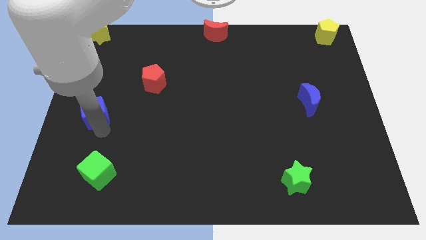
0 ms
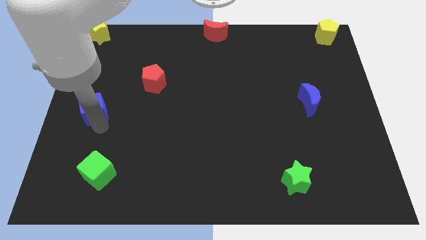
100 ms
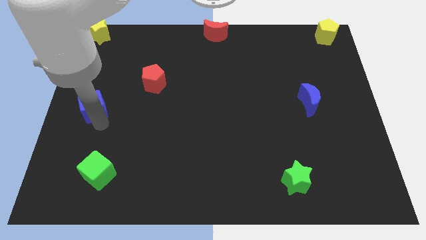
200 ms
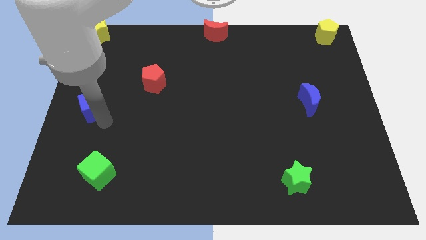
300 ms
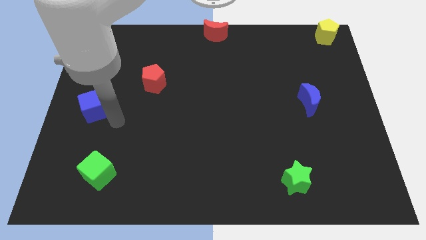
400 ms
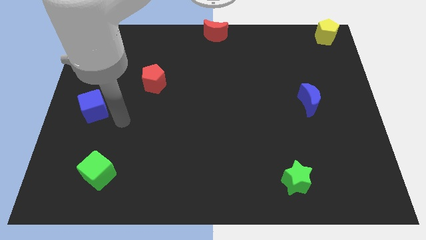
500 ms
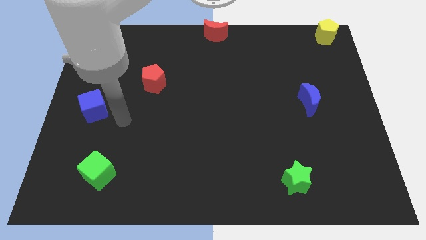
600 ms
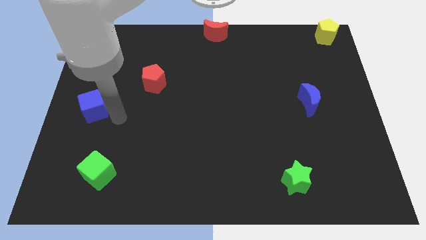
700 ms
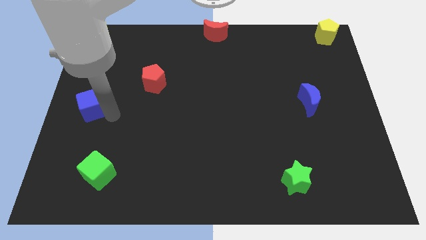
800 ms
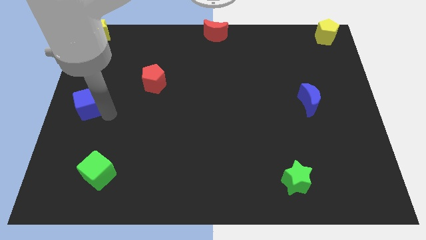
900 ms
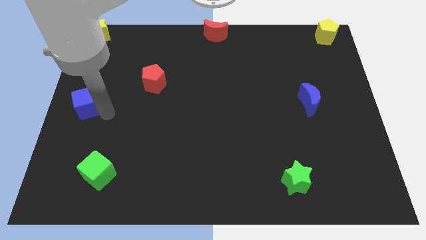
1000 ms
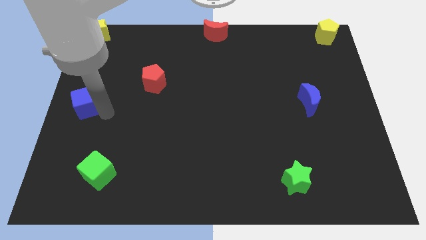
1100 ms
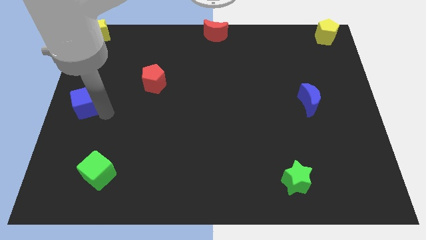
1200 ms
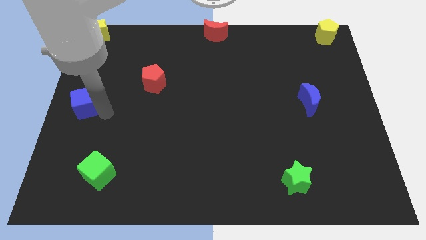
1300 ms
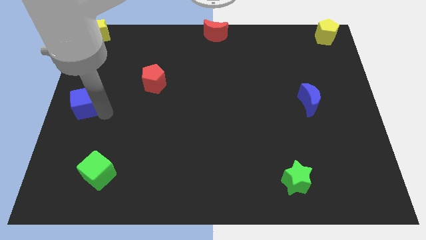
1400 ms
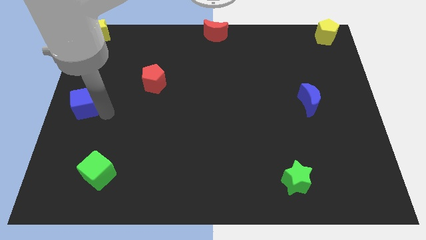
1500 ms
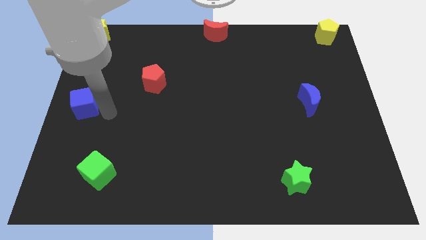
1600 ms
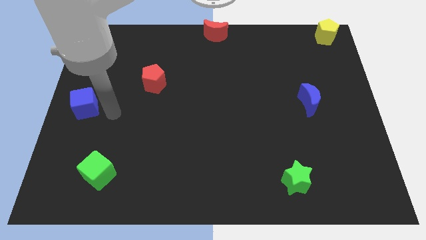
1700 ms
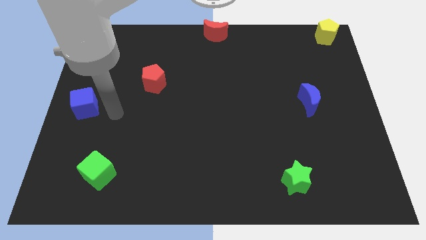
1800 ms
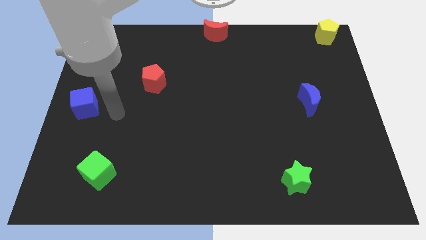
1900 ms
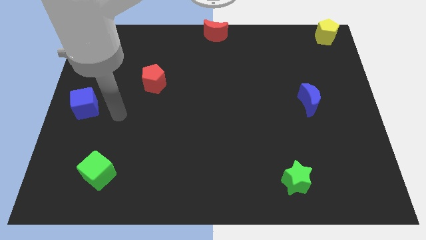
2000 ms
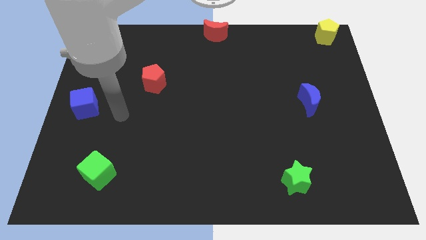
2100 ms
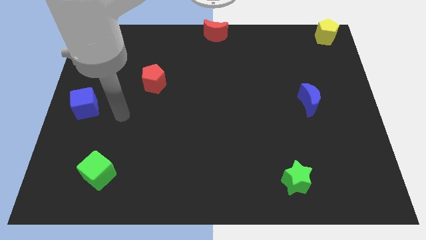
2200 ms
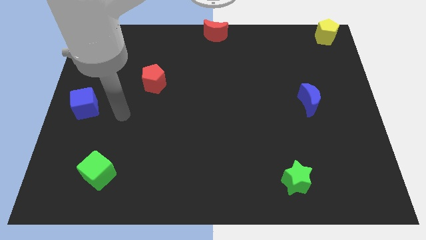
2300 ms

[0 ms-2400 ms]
move the blue cube to the left center of the board

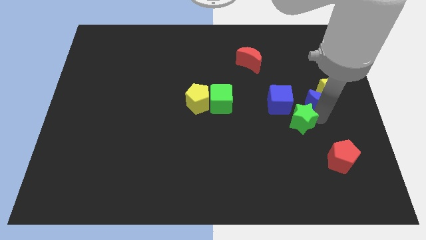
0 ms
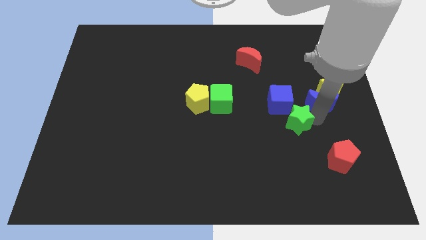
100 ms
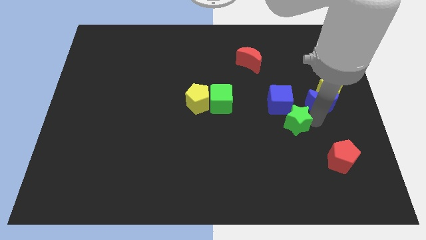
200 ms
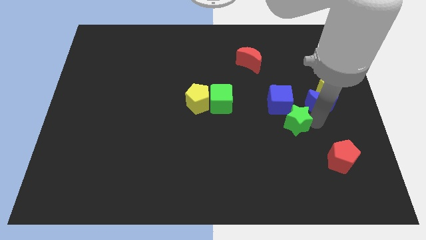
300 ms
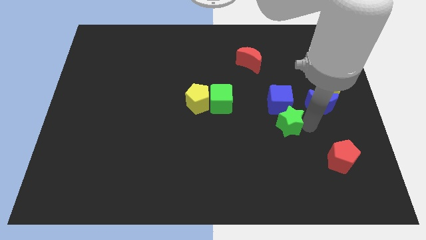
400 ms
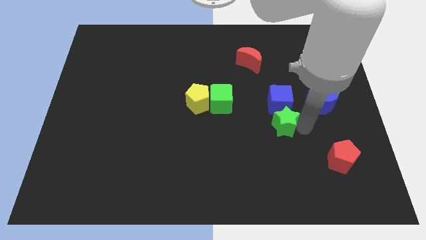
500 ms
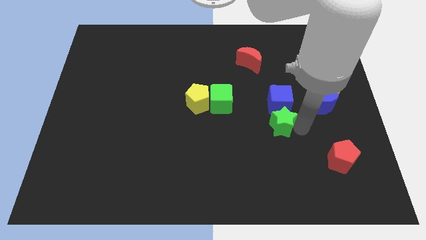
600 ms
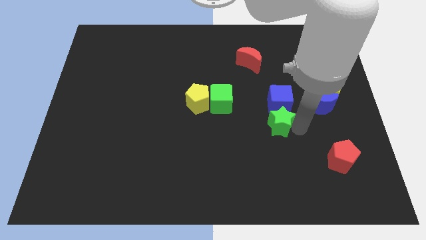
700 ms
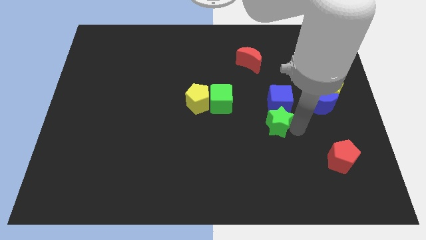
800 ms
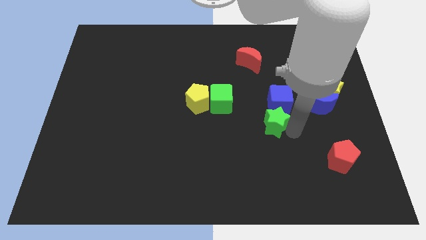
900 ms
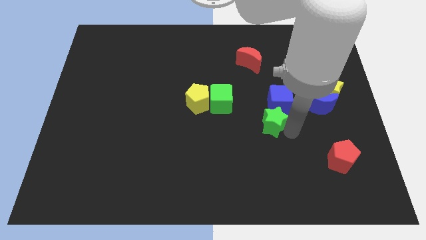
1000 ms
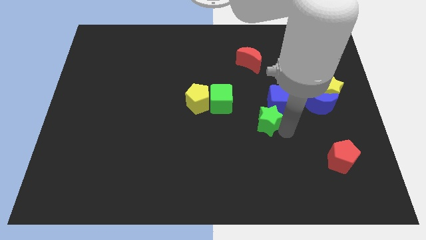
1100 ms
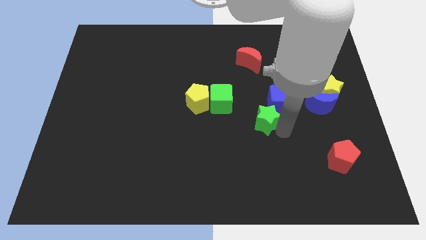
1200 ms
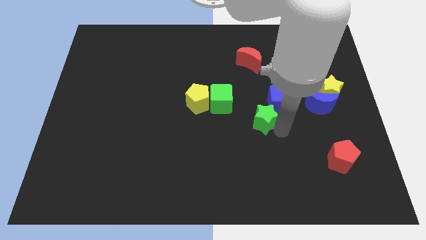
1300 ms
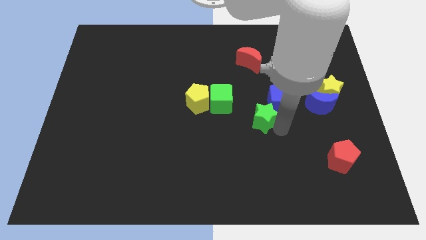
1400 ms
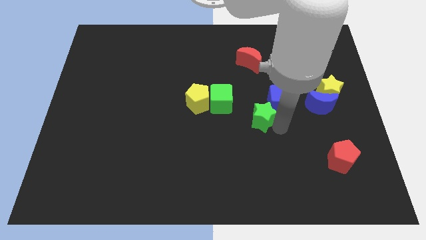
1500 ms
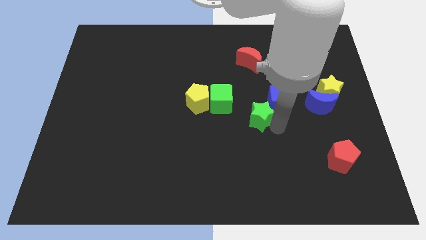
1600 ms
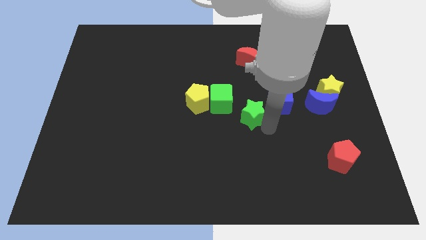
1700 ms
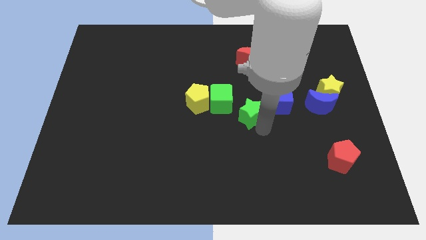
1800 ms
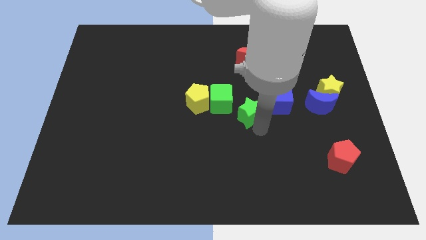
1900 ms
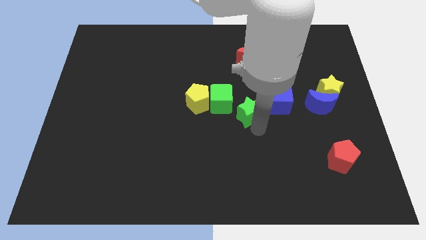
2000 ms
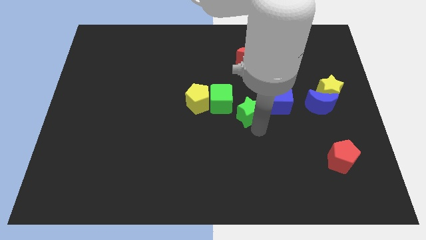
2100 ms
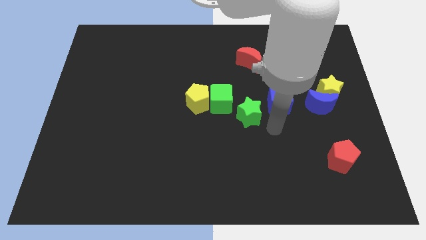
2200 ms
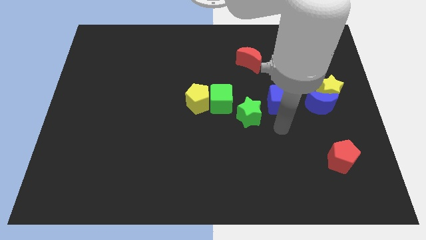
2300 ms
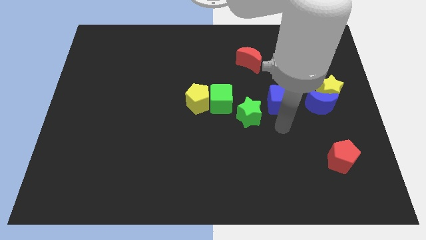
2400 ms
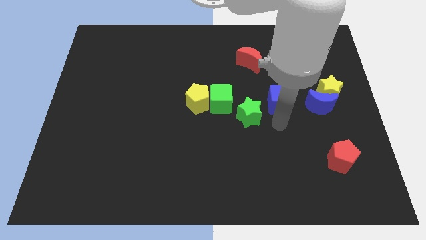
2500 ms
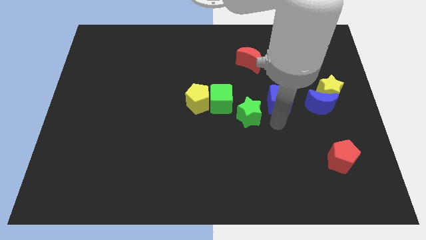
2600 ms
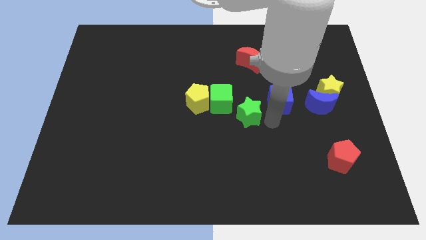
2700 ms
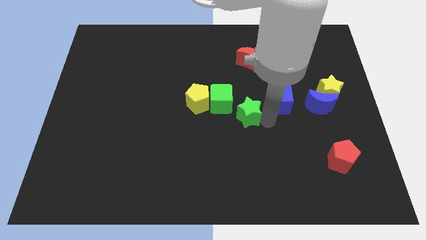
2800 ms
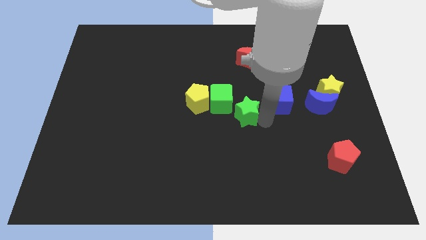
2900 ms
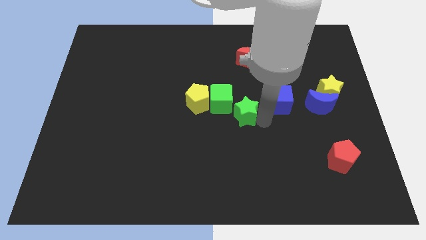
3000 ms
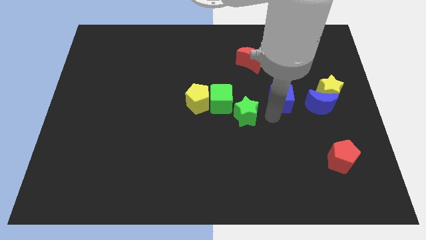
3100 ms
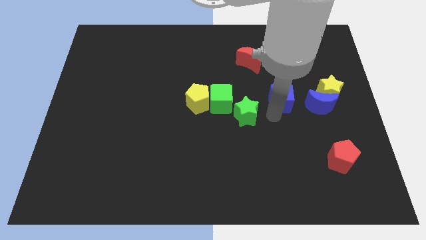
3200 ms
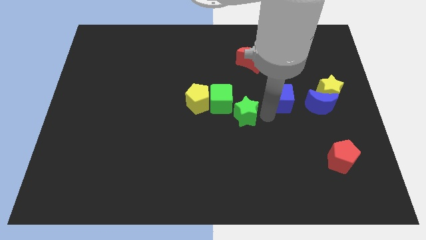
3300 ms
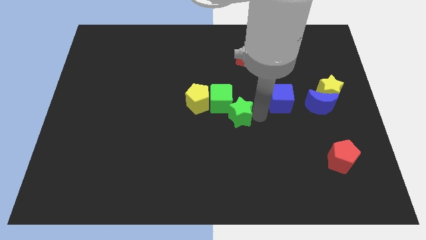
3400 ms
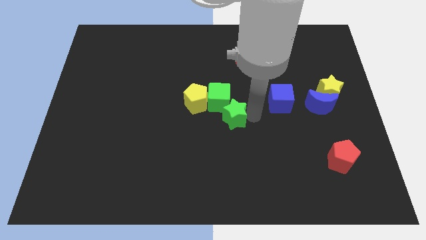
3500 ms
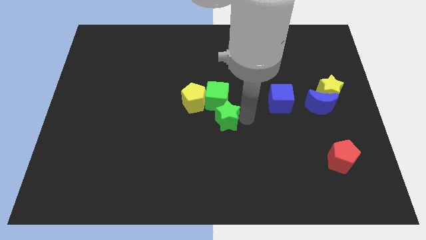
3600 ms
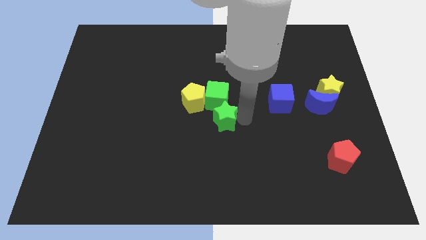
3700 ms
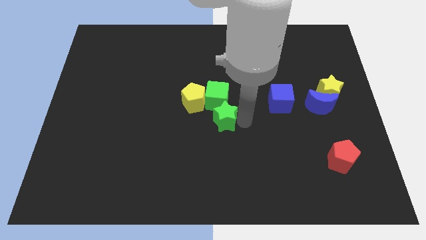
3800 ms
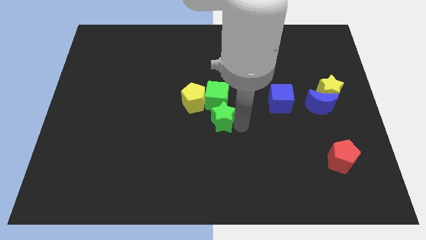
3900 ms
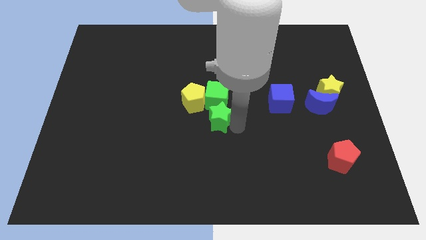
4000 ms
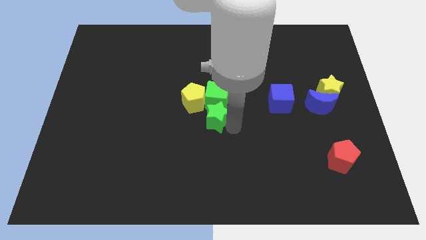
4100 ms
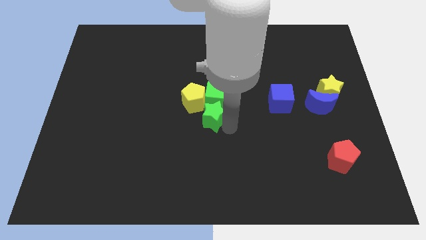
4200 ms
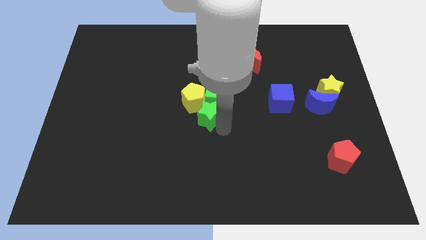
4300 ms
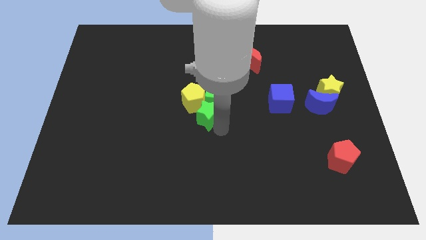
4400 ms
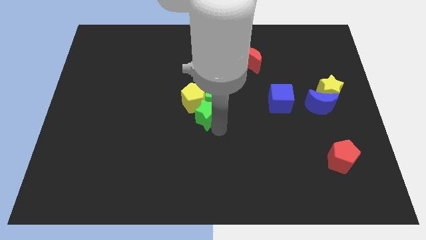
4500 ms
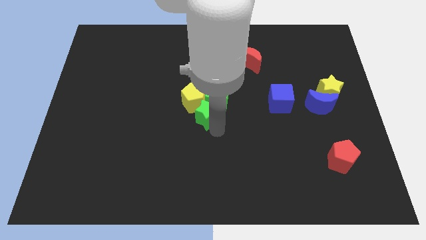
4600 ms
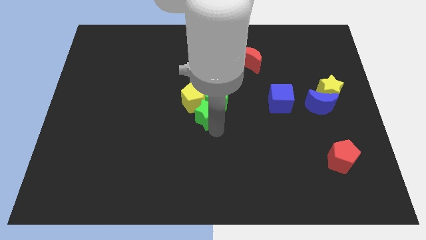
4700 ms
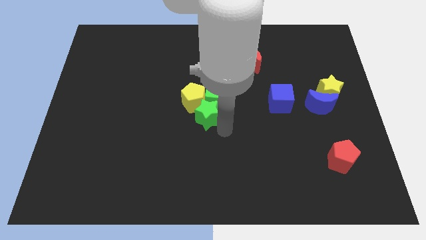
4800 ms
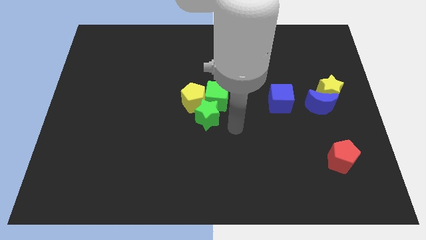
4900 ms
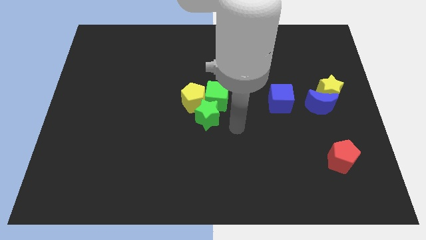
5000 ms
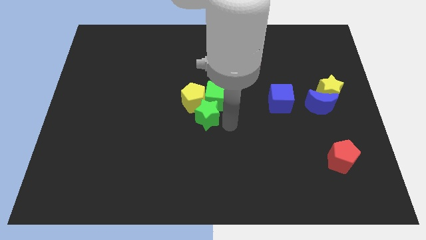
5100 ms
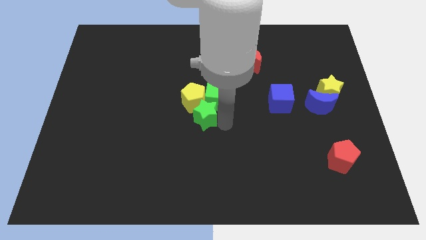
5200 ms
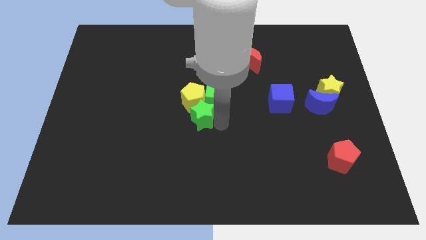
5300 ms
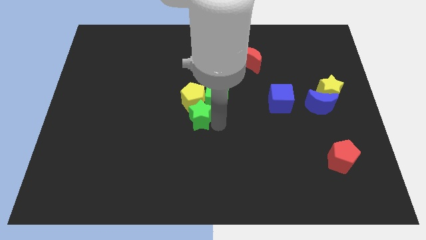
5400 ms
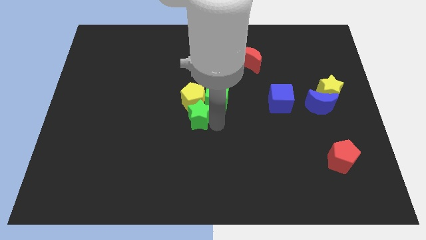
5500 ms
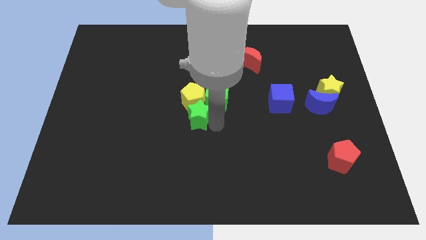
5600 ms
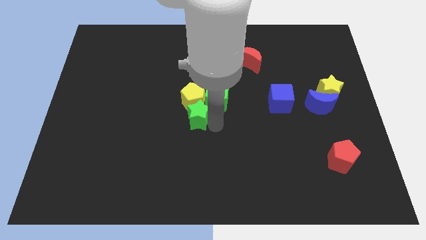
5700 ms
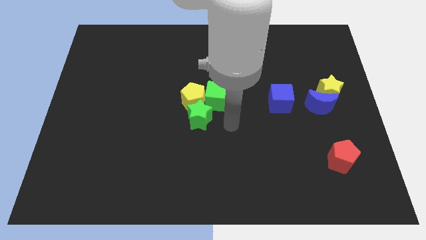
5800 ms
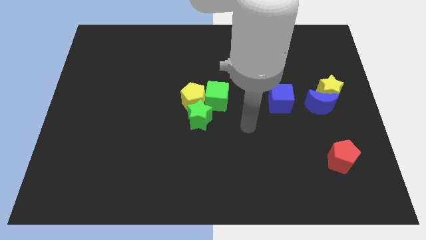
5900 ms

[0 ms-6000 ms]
move the green star below to the yellow pentagon

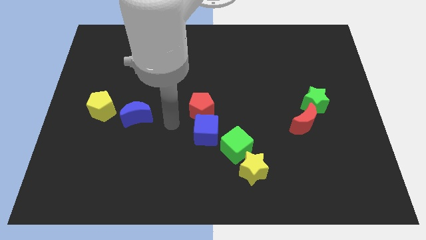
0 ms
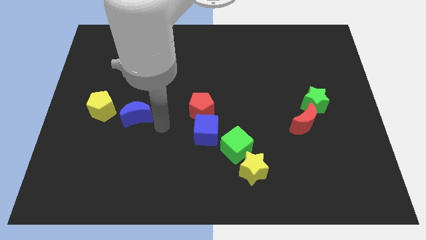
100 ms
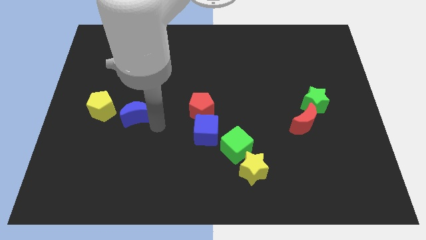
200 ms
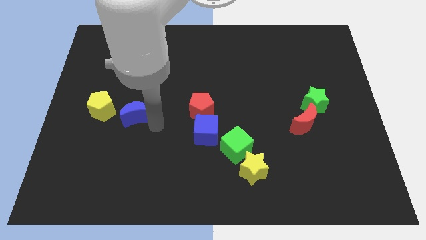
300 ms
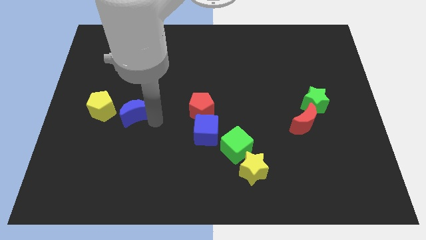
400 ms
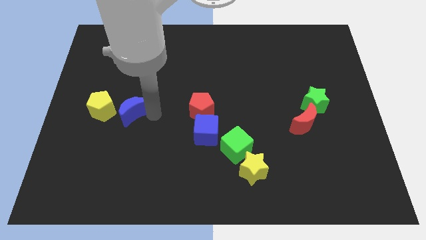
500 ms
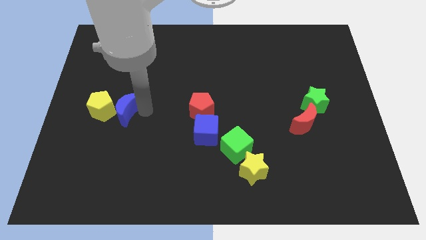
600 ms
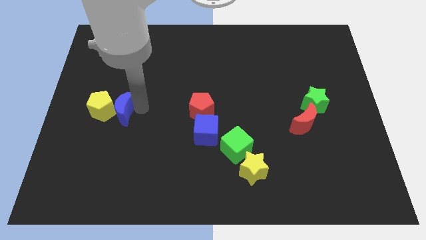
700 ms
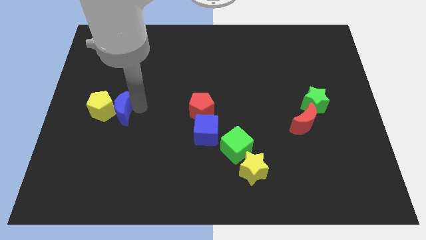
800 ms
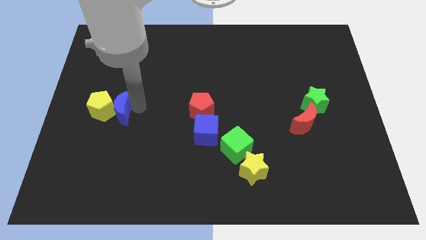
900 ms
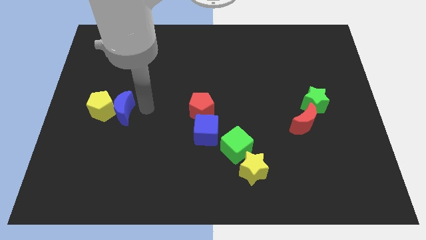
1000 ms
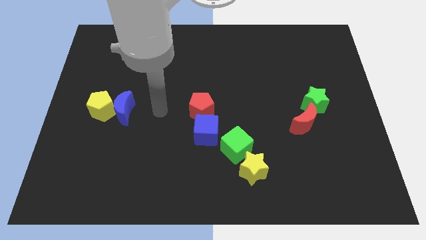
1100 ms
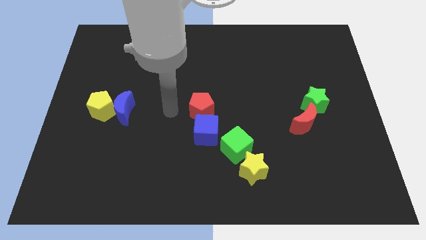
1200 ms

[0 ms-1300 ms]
place the blue moon to the left side of yellow pentagon
